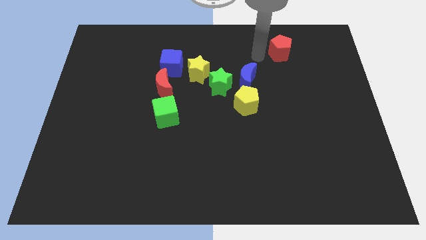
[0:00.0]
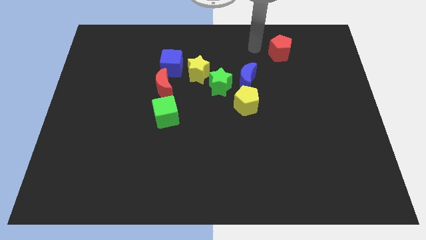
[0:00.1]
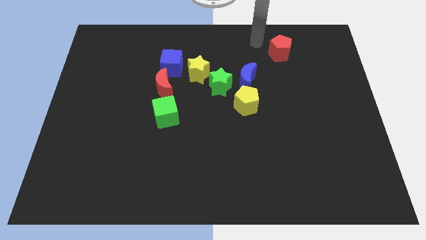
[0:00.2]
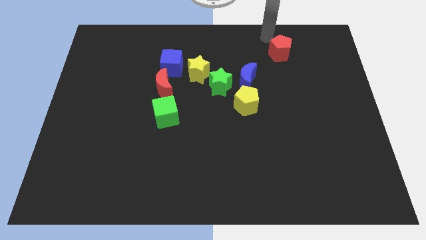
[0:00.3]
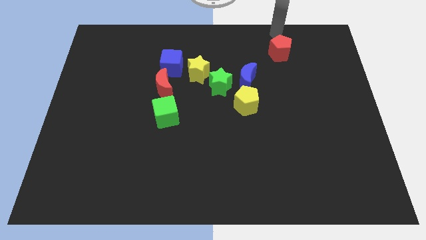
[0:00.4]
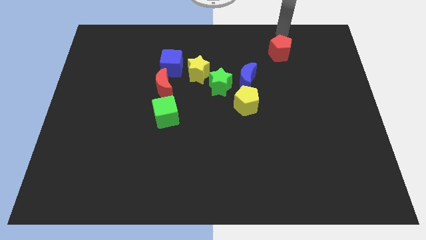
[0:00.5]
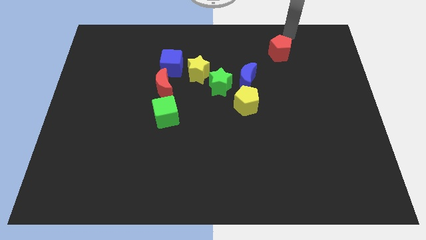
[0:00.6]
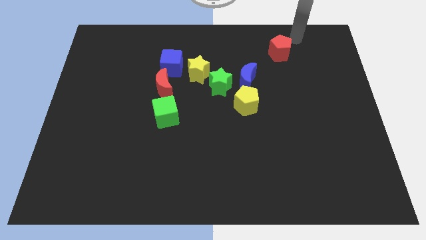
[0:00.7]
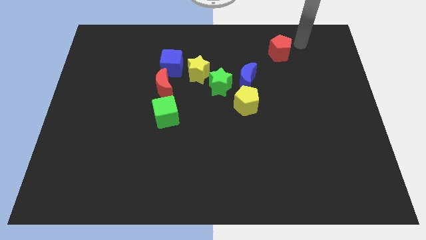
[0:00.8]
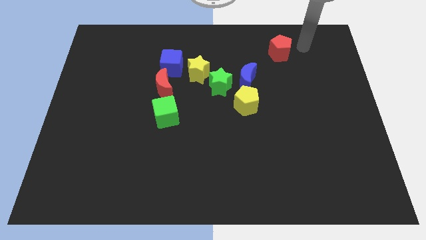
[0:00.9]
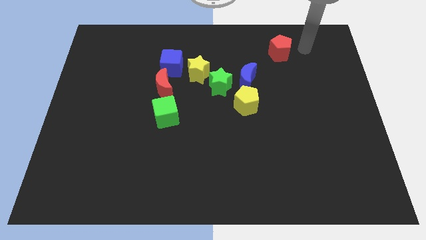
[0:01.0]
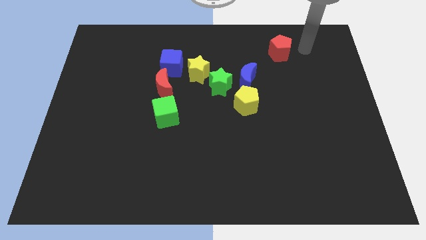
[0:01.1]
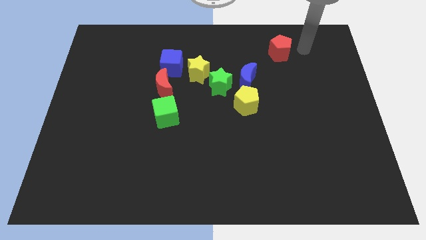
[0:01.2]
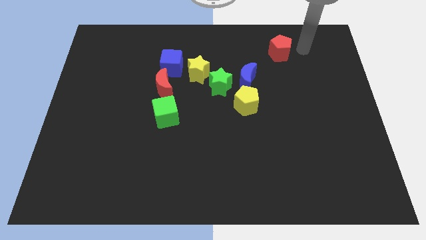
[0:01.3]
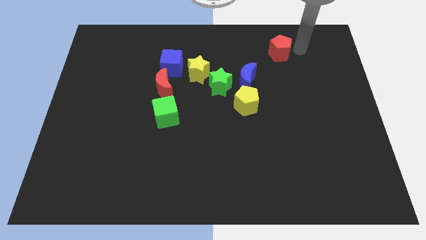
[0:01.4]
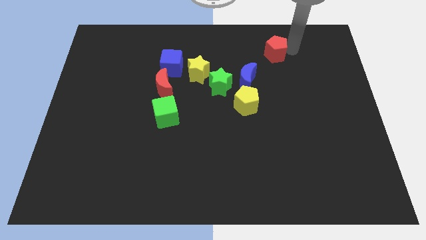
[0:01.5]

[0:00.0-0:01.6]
place the arm right to the red pentagon

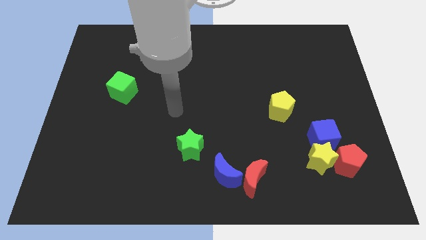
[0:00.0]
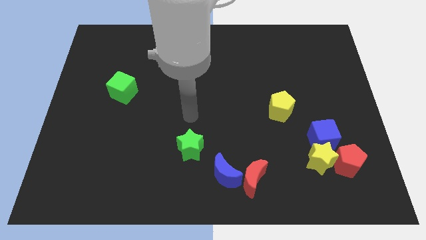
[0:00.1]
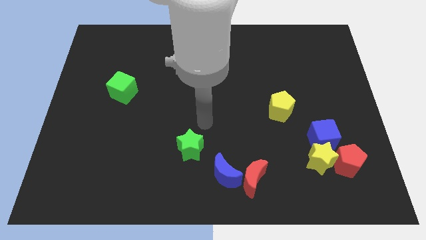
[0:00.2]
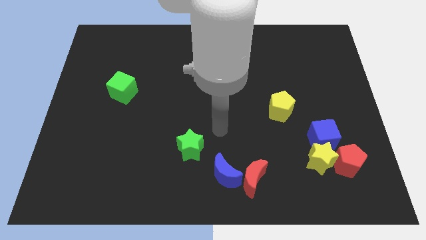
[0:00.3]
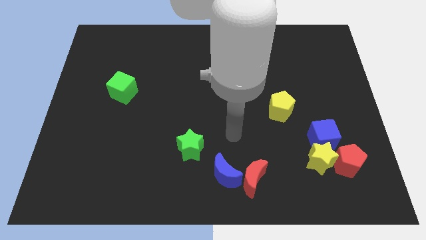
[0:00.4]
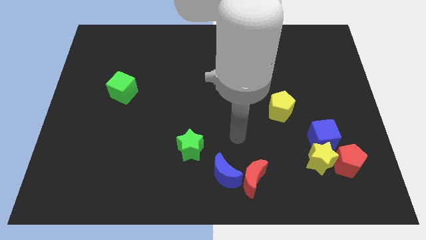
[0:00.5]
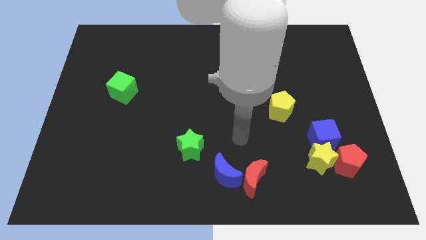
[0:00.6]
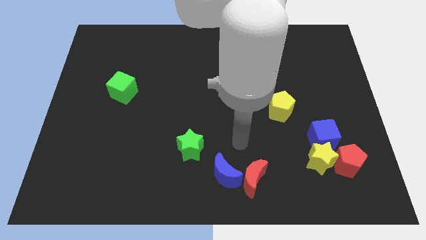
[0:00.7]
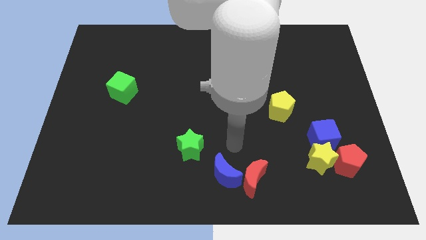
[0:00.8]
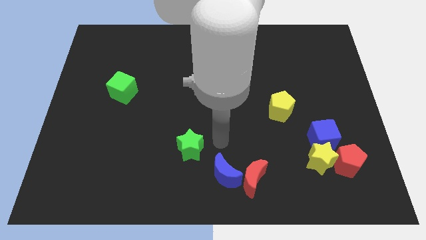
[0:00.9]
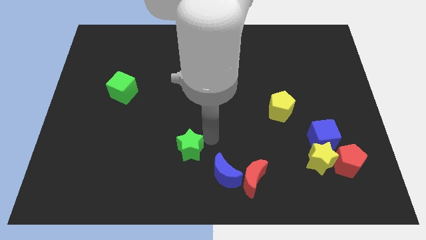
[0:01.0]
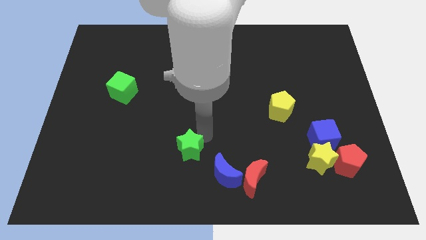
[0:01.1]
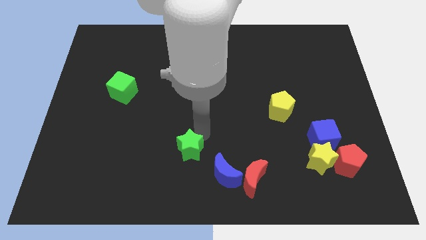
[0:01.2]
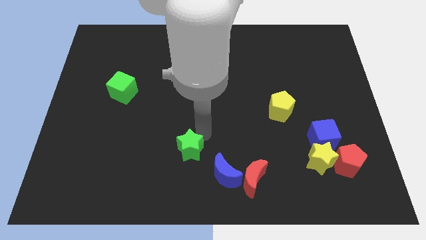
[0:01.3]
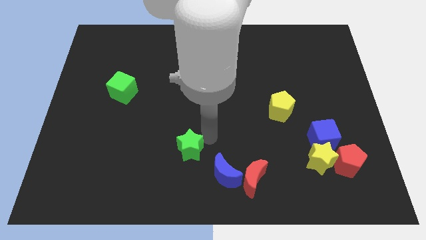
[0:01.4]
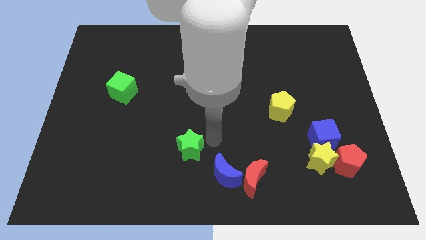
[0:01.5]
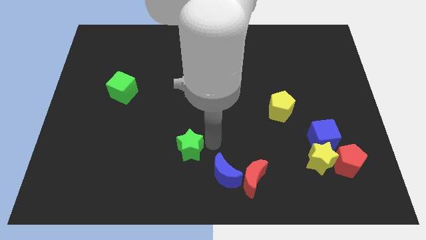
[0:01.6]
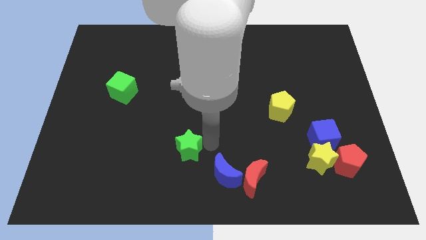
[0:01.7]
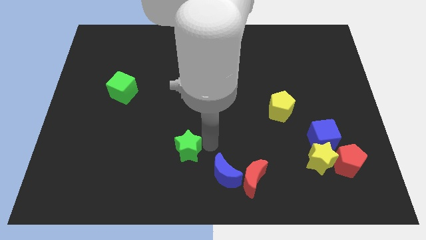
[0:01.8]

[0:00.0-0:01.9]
point your arm at the right of the green star

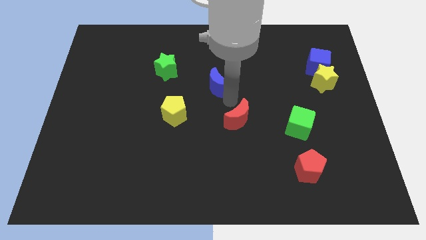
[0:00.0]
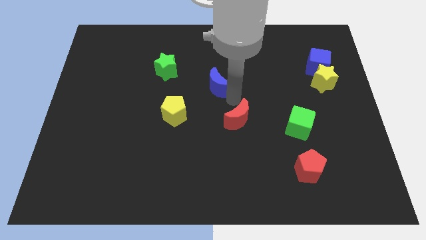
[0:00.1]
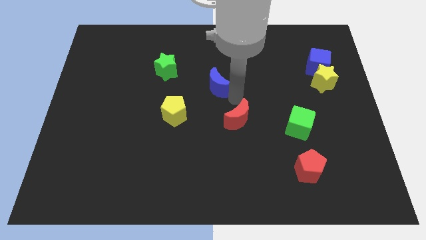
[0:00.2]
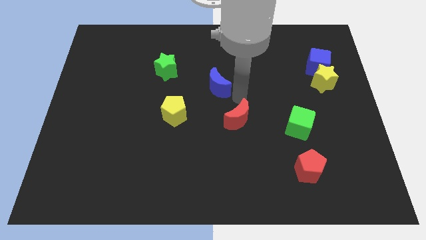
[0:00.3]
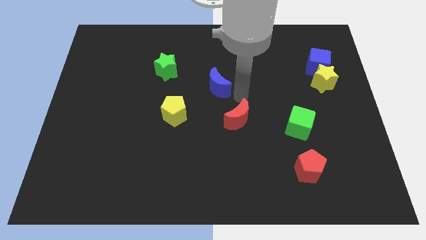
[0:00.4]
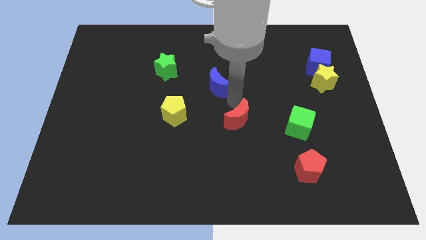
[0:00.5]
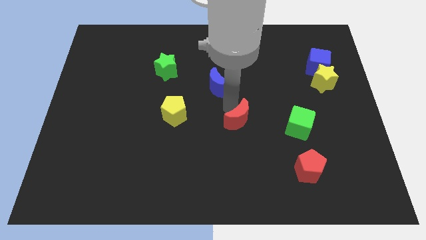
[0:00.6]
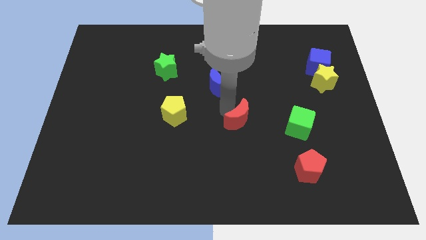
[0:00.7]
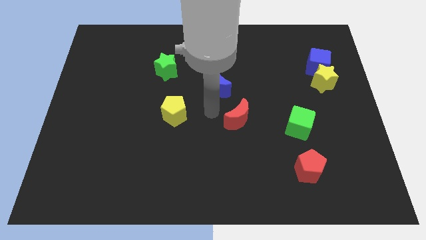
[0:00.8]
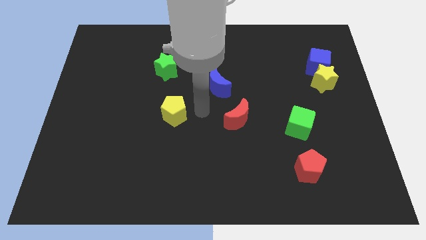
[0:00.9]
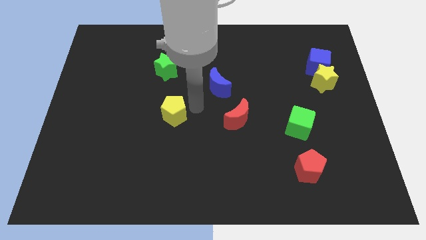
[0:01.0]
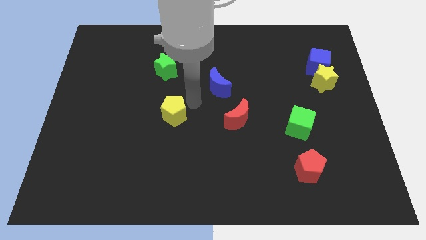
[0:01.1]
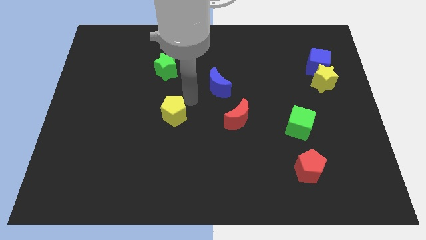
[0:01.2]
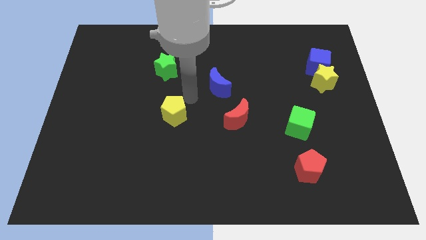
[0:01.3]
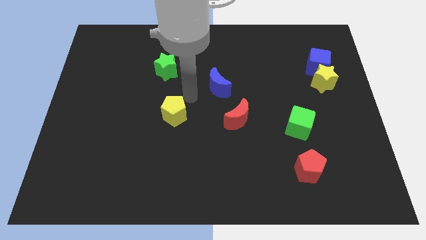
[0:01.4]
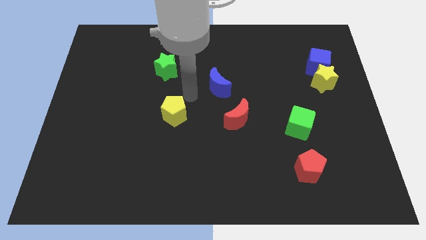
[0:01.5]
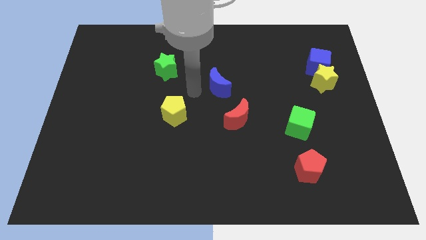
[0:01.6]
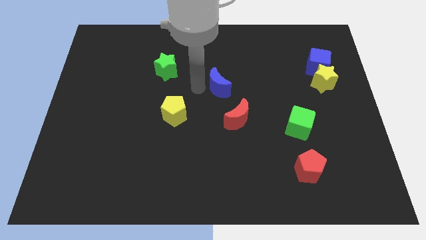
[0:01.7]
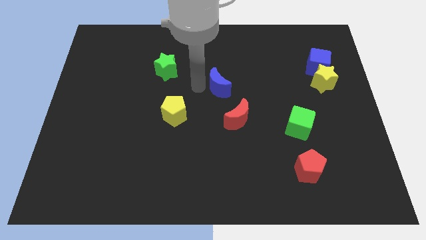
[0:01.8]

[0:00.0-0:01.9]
place your arm to the left of blue moon

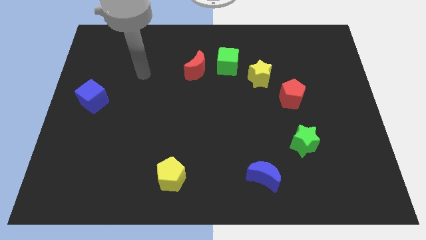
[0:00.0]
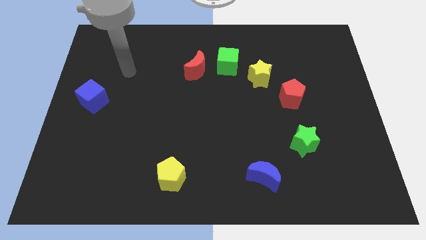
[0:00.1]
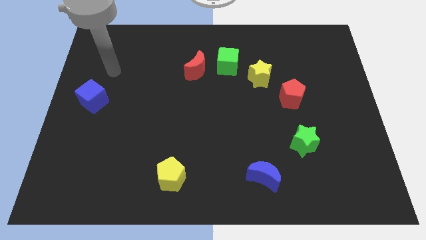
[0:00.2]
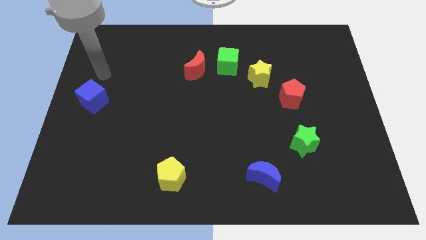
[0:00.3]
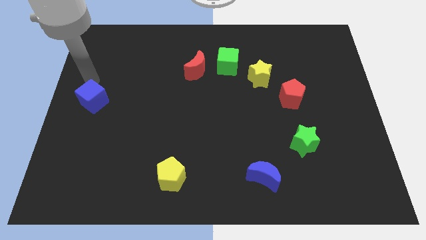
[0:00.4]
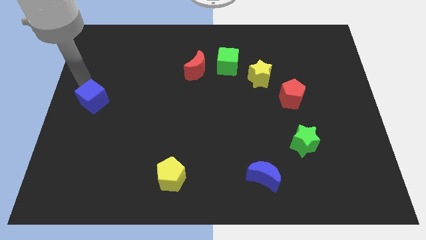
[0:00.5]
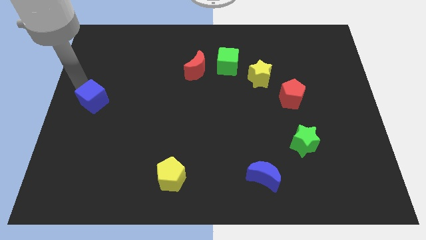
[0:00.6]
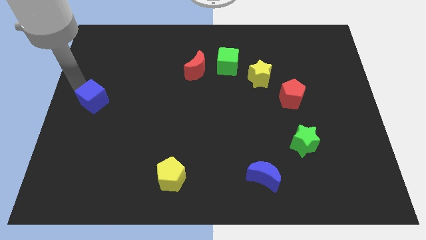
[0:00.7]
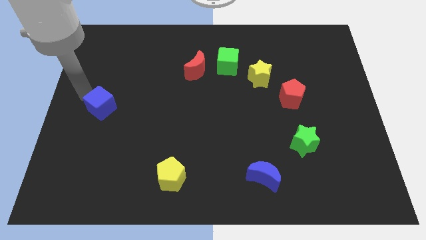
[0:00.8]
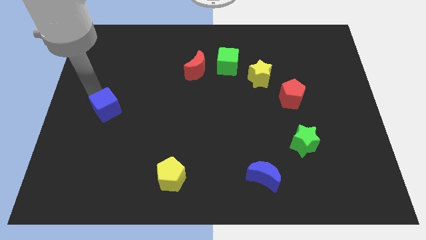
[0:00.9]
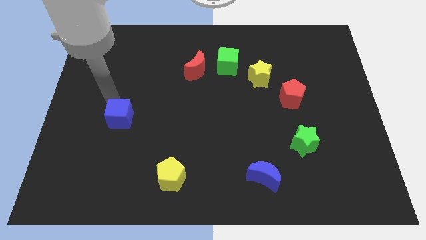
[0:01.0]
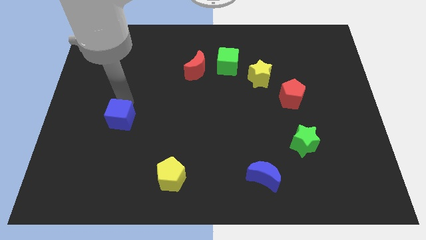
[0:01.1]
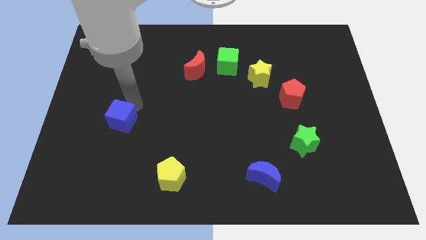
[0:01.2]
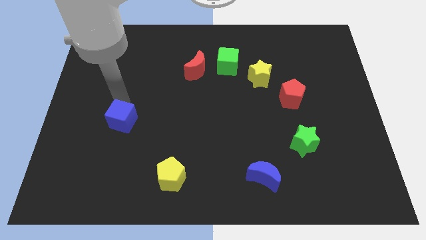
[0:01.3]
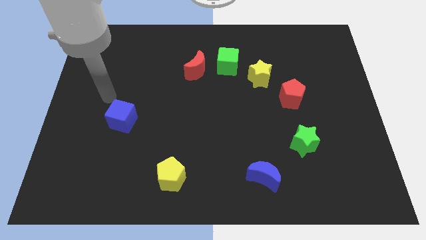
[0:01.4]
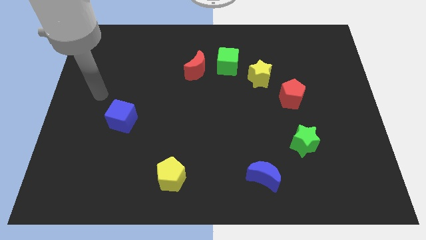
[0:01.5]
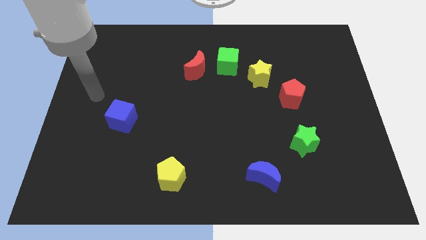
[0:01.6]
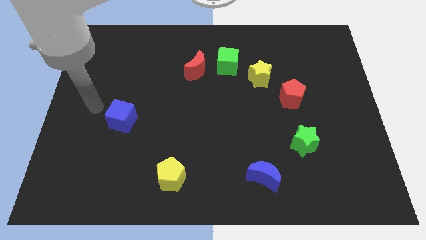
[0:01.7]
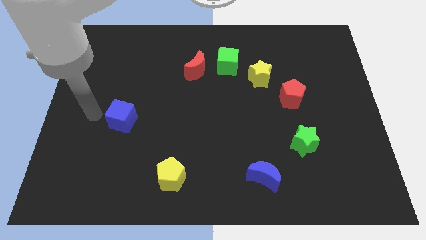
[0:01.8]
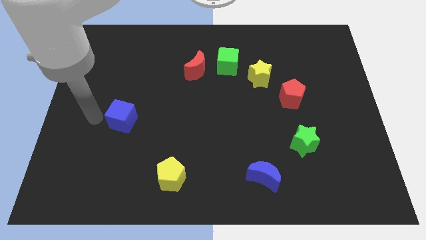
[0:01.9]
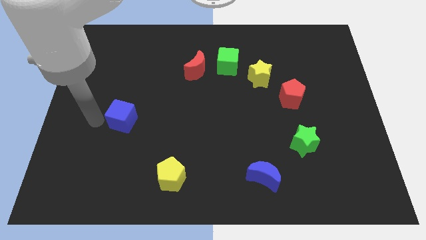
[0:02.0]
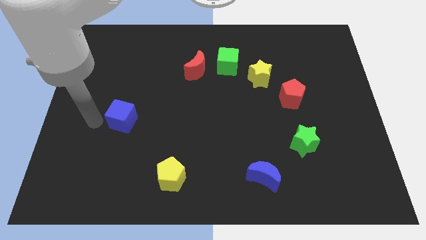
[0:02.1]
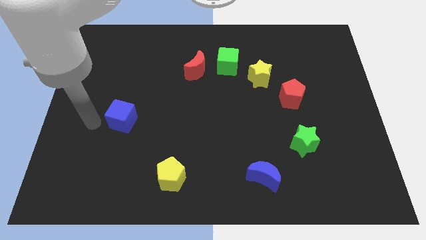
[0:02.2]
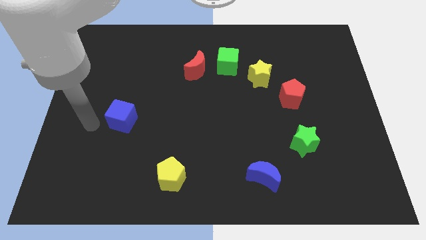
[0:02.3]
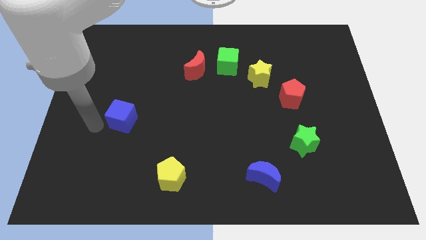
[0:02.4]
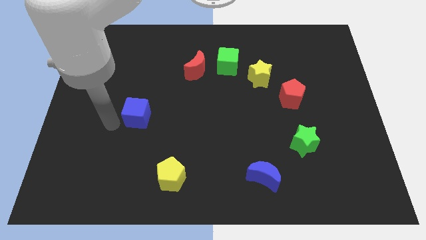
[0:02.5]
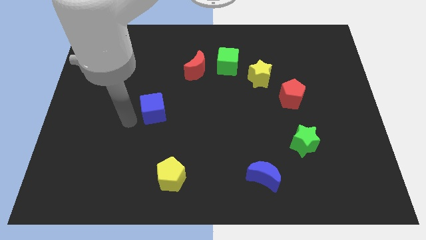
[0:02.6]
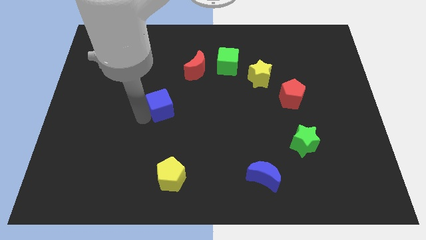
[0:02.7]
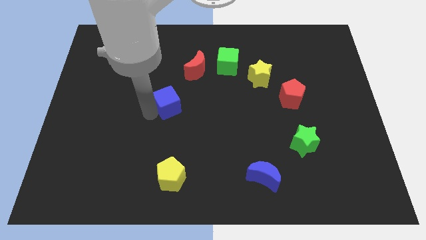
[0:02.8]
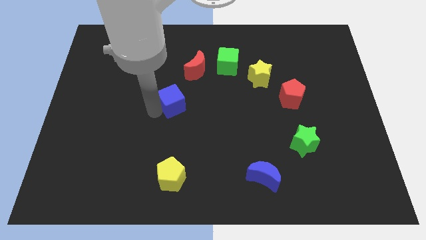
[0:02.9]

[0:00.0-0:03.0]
move blue cube above yellow pentagon

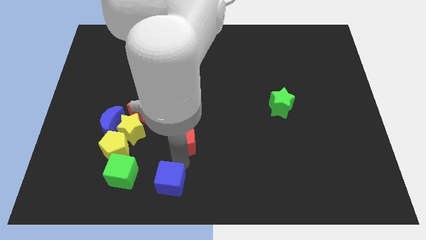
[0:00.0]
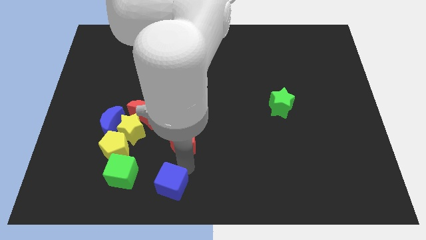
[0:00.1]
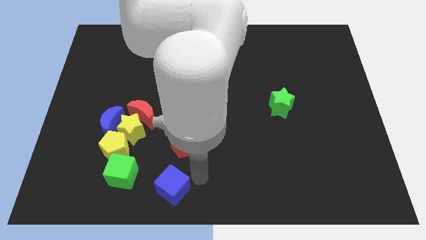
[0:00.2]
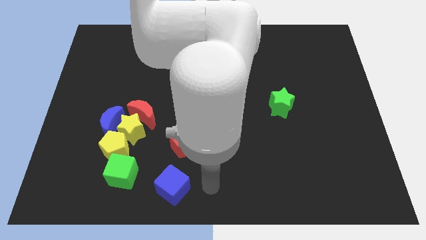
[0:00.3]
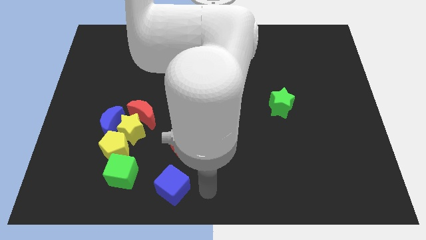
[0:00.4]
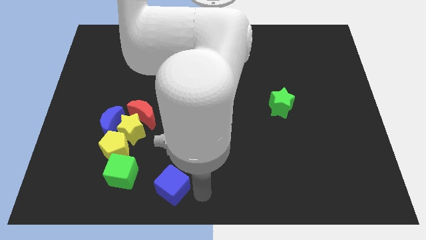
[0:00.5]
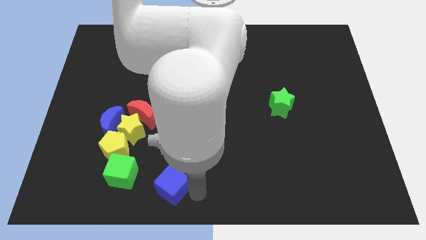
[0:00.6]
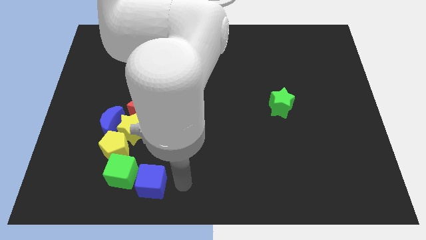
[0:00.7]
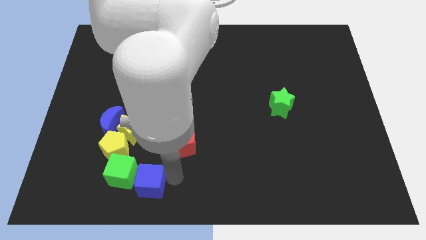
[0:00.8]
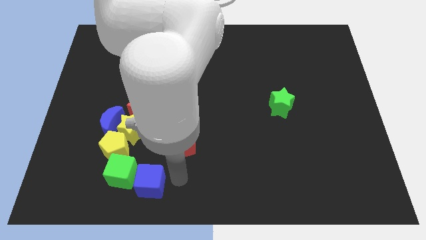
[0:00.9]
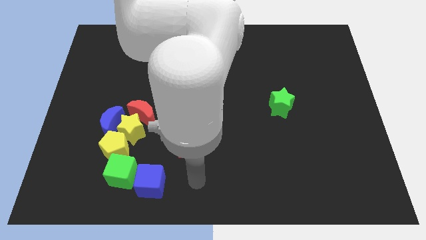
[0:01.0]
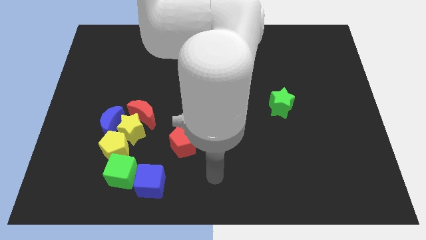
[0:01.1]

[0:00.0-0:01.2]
move the blue cube to the right of the green cube
